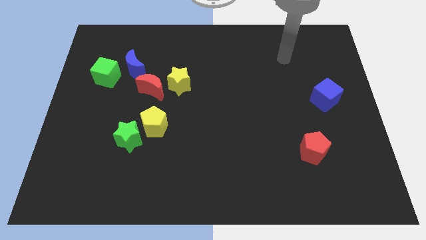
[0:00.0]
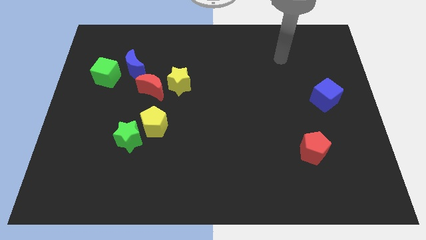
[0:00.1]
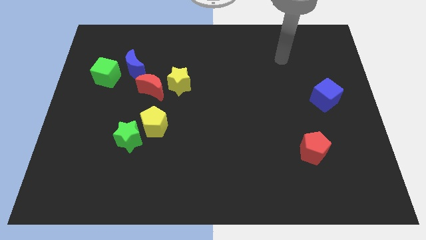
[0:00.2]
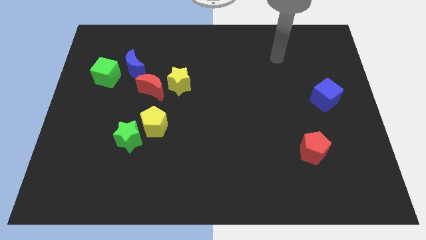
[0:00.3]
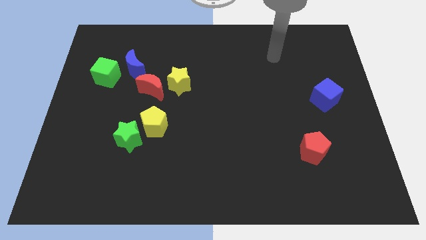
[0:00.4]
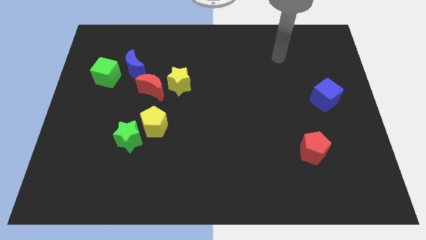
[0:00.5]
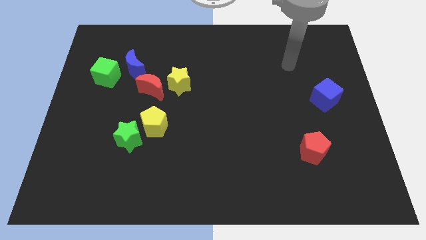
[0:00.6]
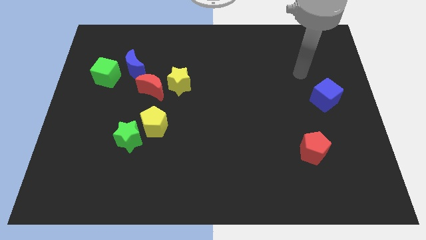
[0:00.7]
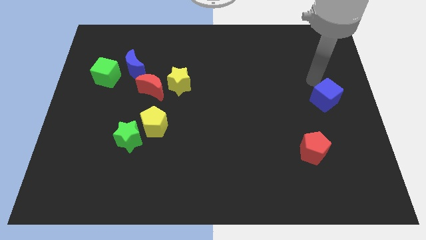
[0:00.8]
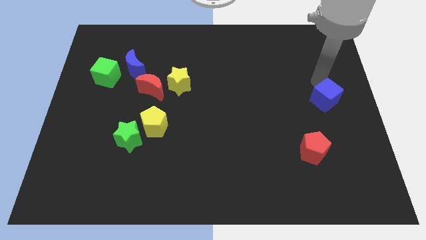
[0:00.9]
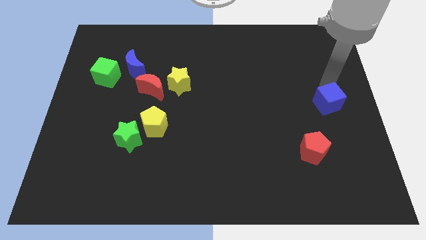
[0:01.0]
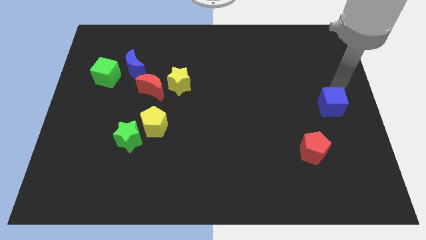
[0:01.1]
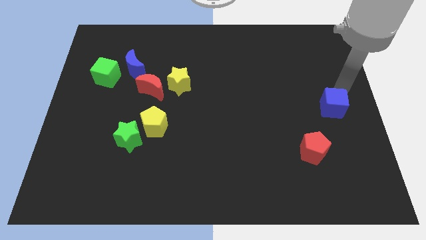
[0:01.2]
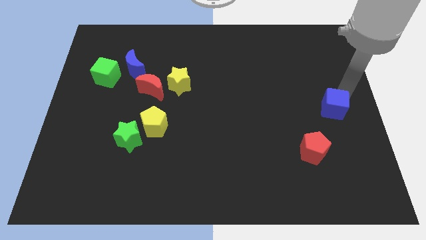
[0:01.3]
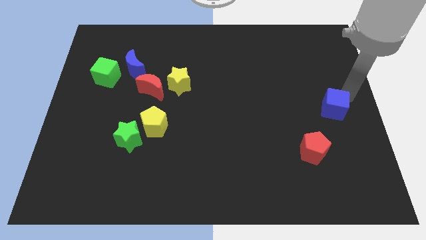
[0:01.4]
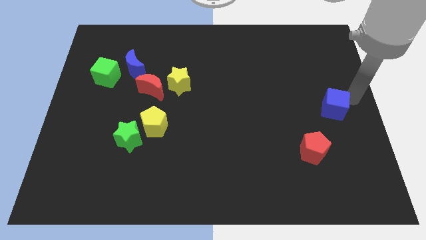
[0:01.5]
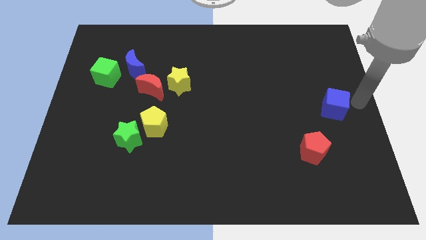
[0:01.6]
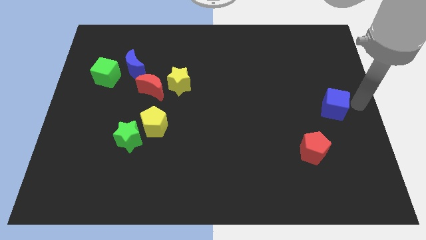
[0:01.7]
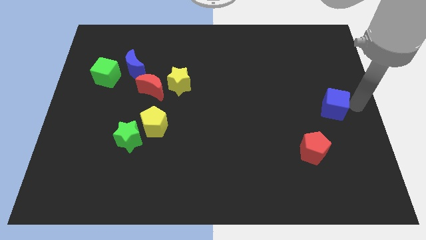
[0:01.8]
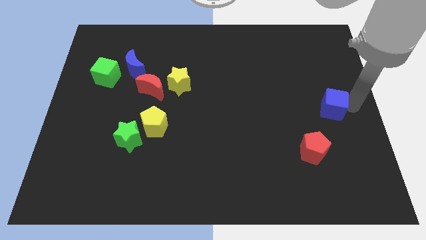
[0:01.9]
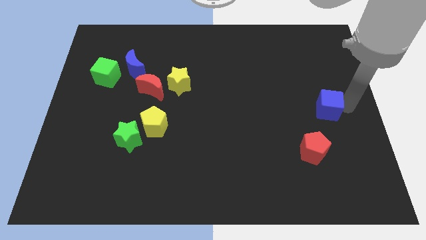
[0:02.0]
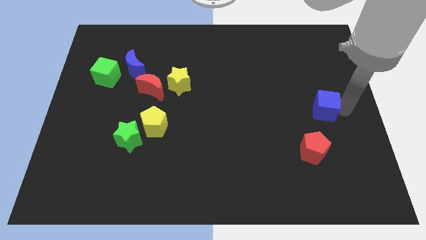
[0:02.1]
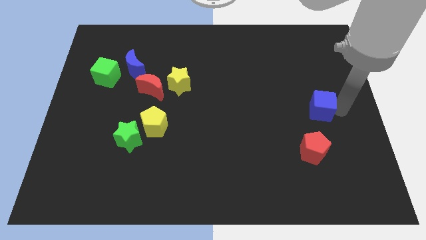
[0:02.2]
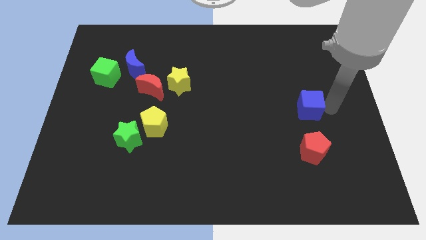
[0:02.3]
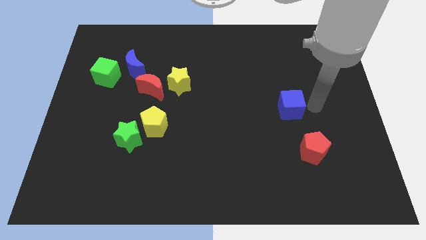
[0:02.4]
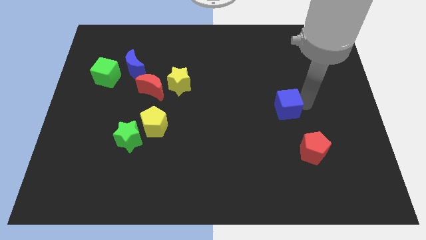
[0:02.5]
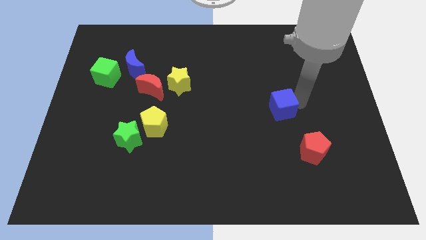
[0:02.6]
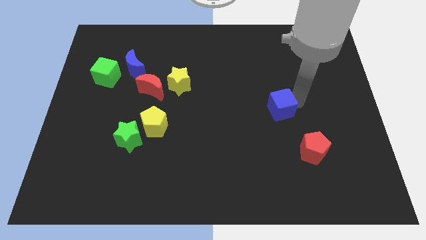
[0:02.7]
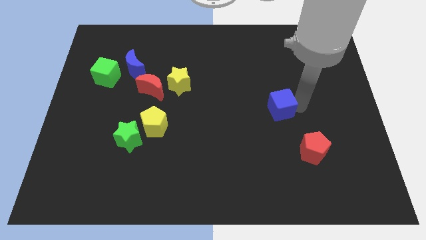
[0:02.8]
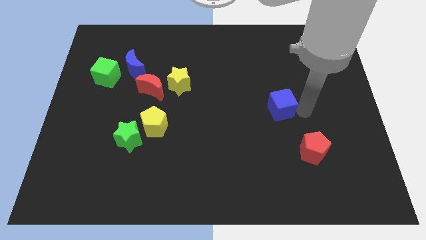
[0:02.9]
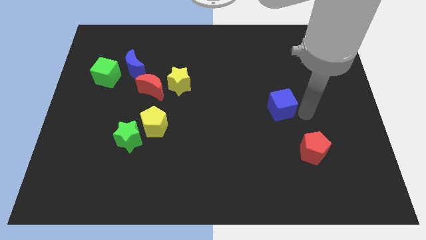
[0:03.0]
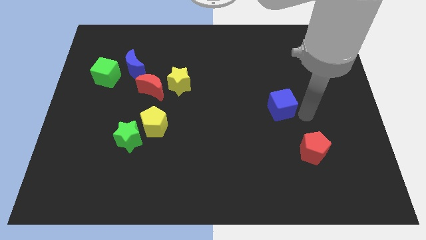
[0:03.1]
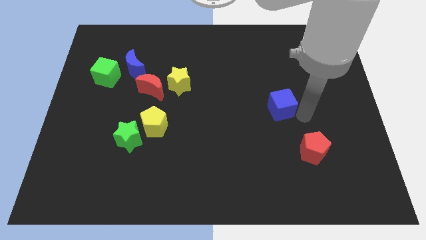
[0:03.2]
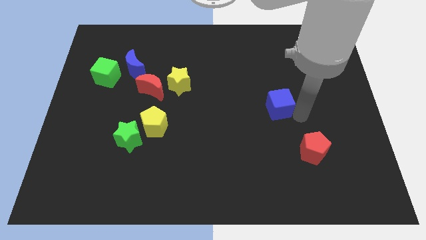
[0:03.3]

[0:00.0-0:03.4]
move the blue cube to the top left of the red crescent

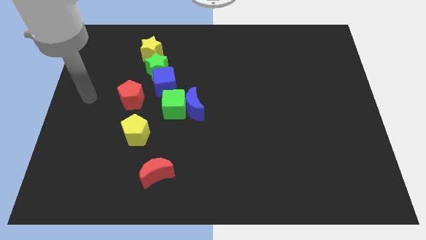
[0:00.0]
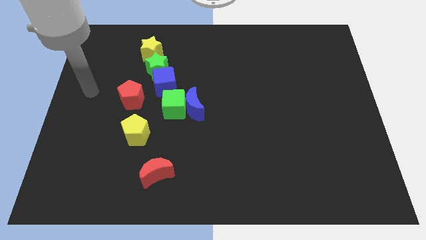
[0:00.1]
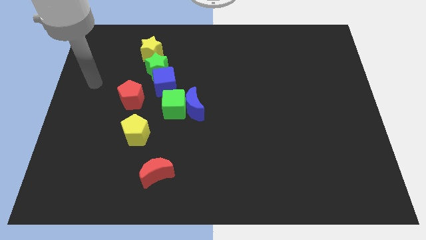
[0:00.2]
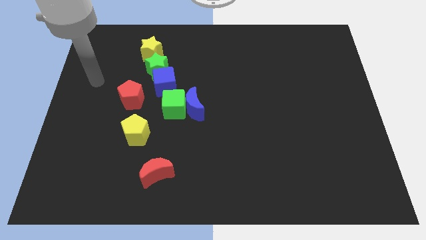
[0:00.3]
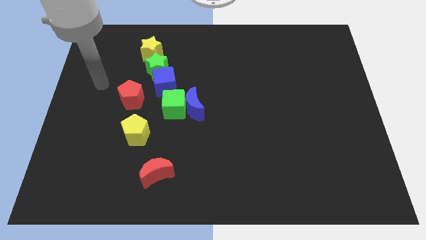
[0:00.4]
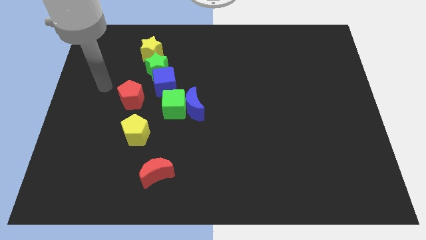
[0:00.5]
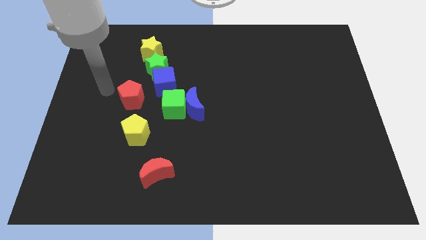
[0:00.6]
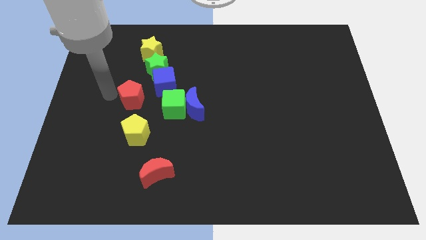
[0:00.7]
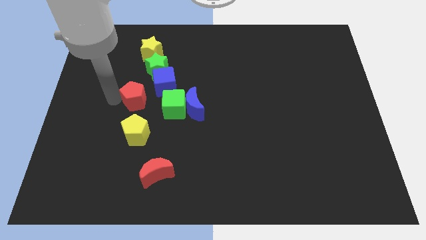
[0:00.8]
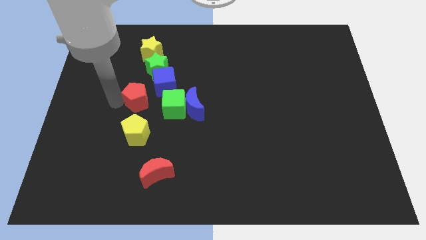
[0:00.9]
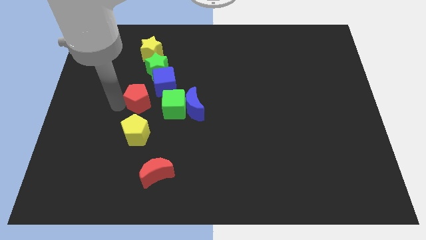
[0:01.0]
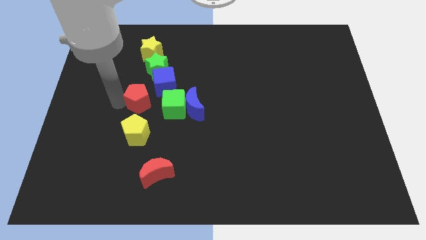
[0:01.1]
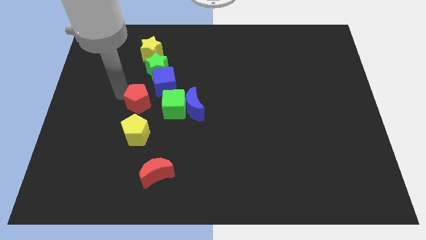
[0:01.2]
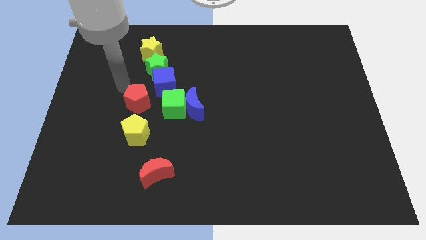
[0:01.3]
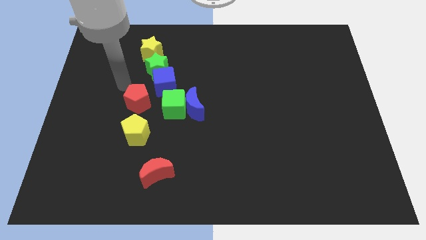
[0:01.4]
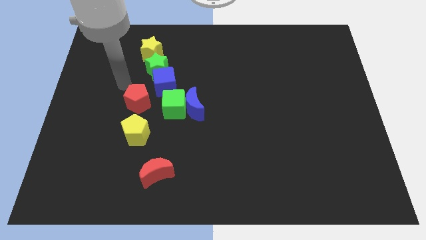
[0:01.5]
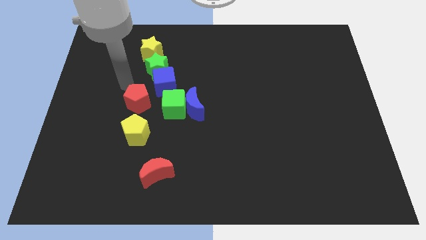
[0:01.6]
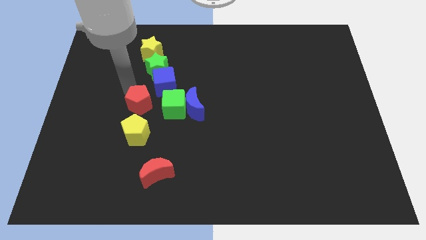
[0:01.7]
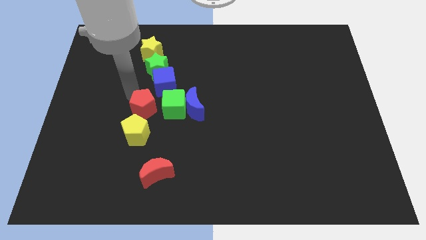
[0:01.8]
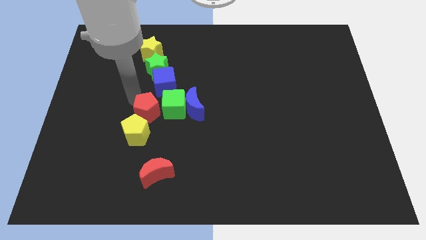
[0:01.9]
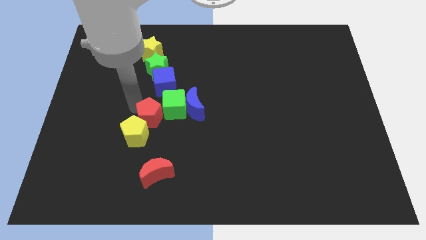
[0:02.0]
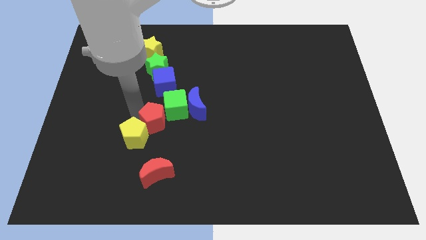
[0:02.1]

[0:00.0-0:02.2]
place the red pentagon diagonally top right to the yellow pentagon

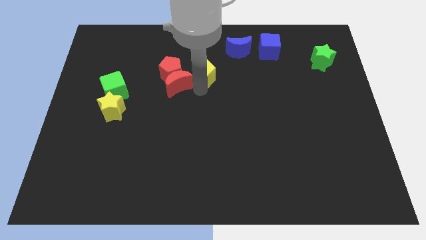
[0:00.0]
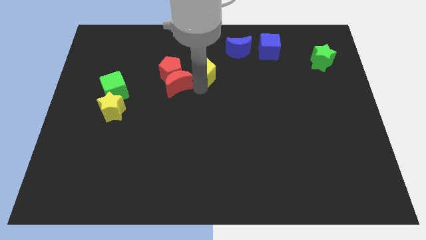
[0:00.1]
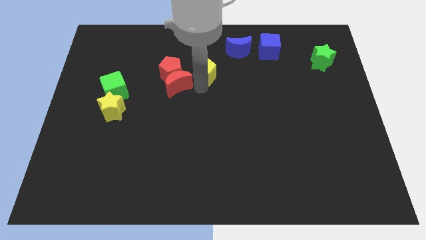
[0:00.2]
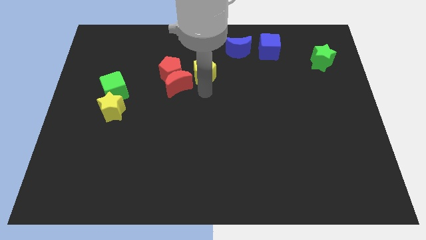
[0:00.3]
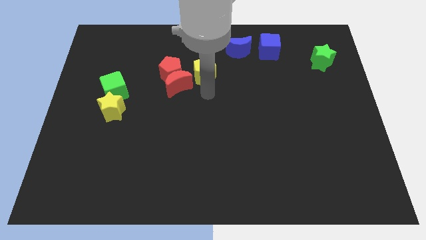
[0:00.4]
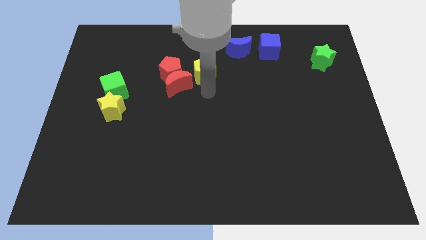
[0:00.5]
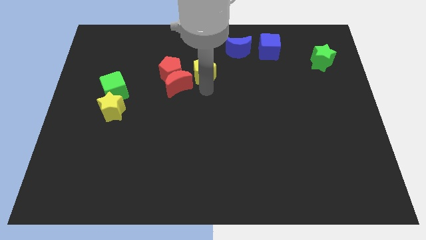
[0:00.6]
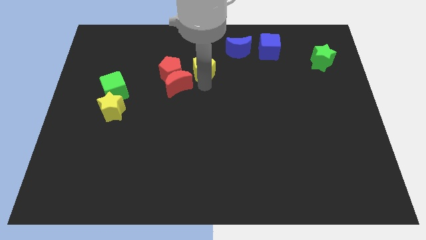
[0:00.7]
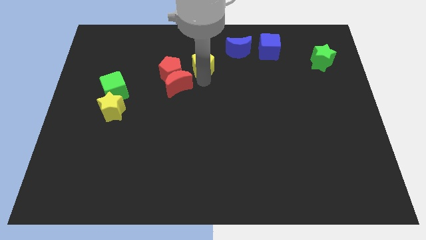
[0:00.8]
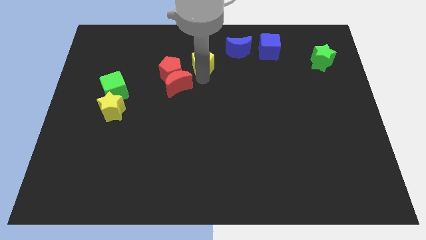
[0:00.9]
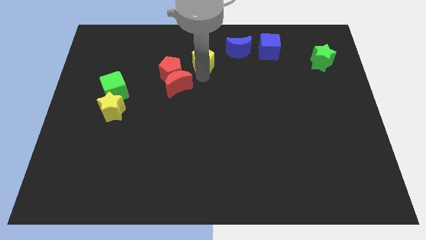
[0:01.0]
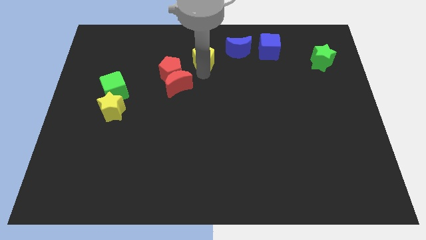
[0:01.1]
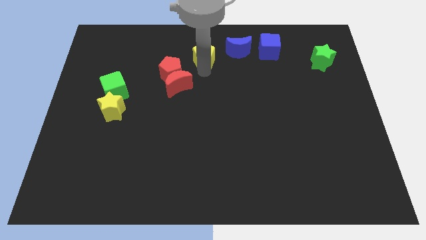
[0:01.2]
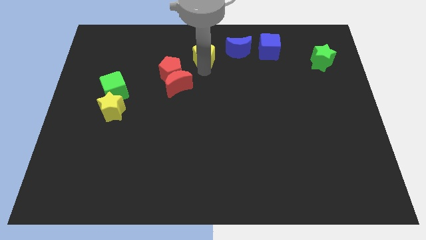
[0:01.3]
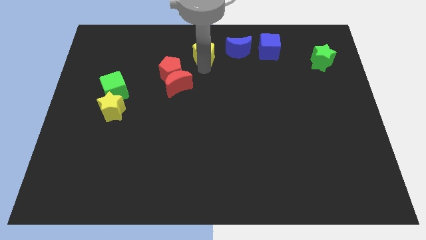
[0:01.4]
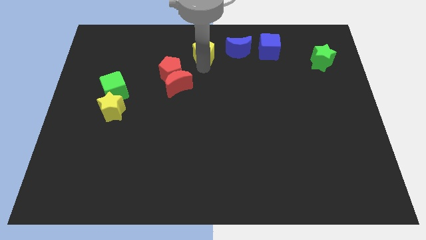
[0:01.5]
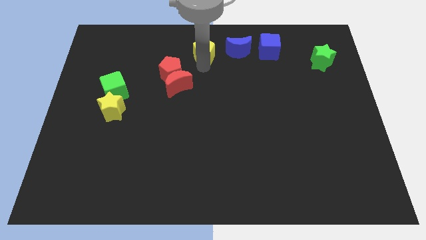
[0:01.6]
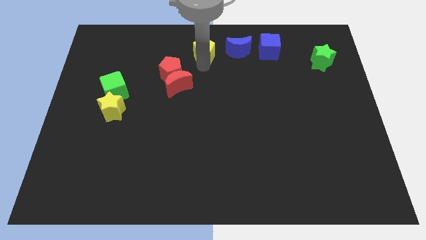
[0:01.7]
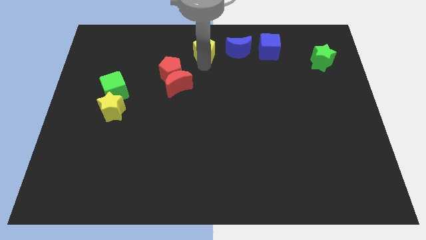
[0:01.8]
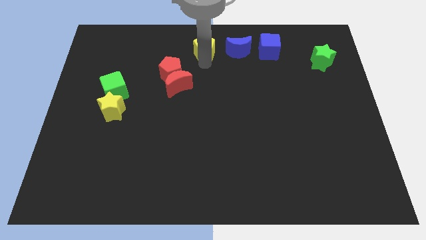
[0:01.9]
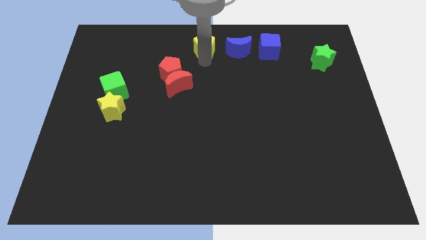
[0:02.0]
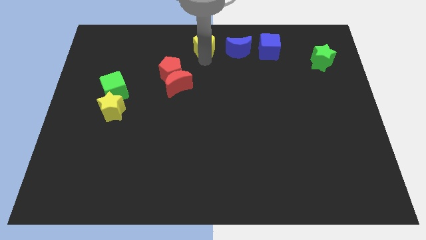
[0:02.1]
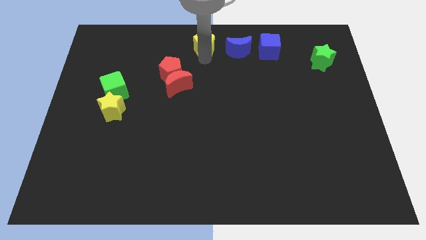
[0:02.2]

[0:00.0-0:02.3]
place the yellow pentagon to the left of the blue moon

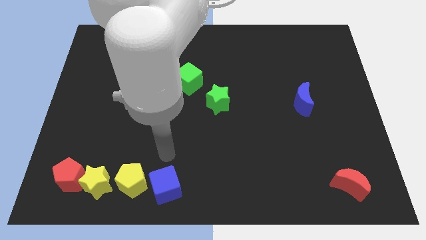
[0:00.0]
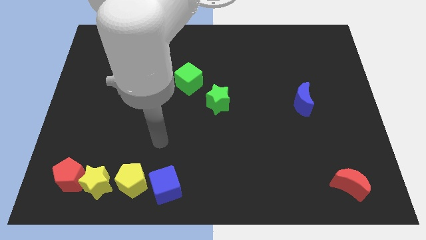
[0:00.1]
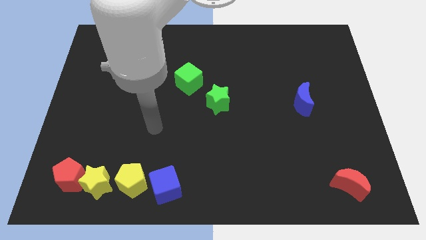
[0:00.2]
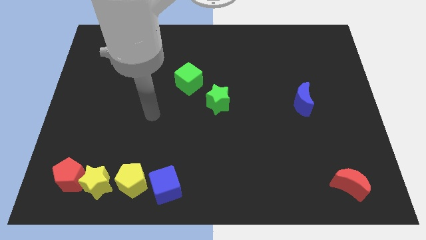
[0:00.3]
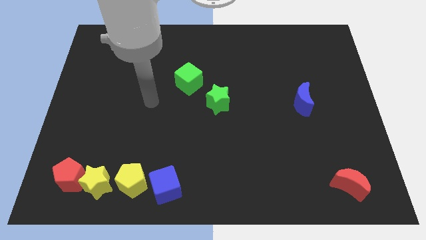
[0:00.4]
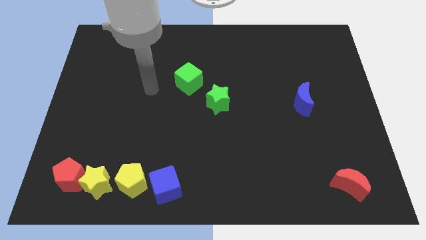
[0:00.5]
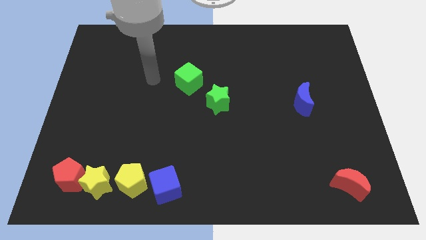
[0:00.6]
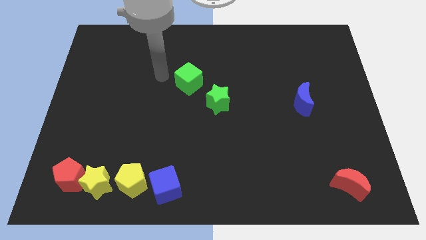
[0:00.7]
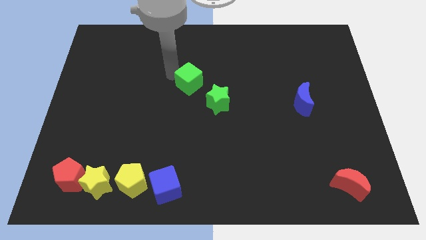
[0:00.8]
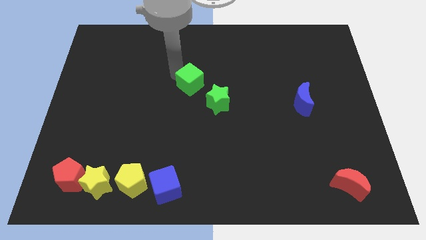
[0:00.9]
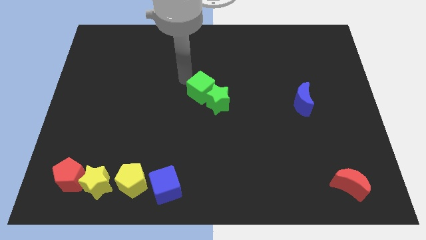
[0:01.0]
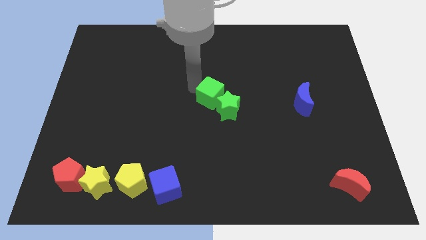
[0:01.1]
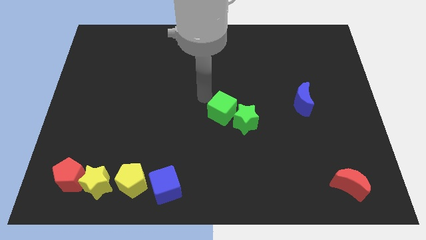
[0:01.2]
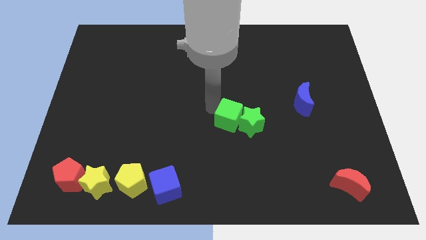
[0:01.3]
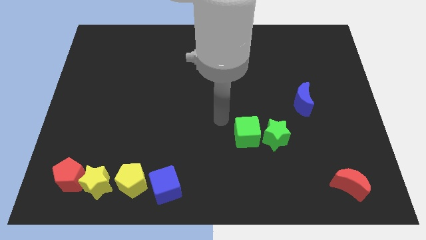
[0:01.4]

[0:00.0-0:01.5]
push the green cube into green star and push towards bottom

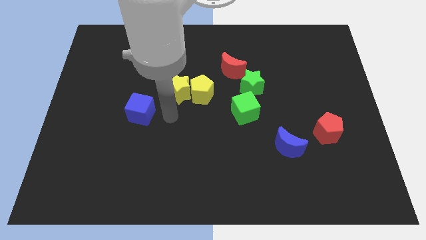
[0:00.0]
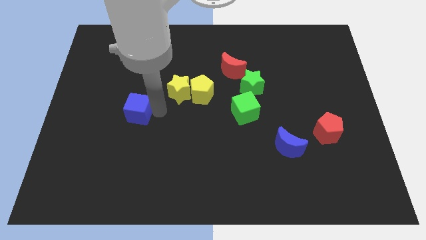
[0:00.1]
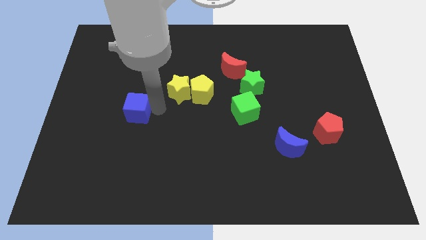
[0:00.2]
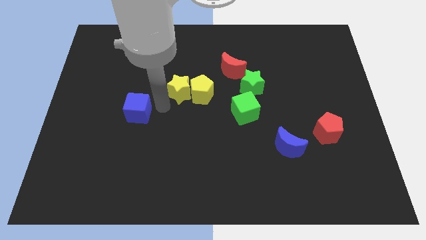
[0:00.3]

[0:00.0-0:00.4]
slightly push the blue cube towards the left side
